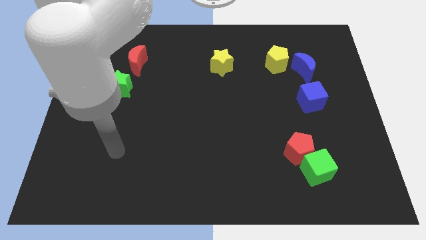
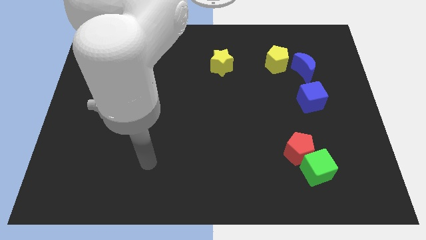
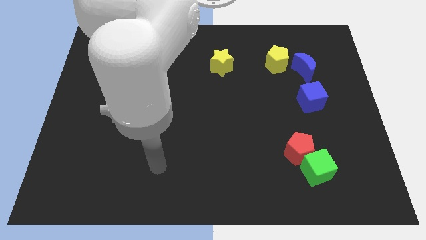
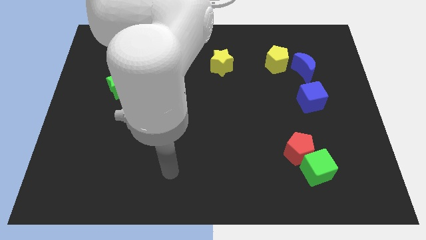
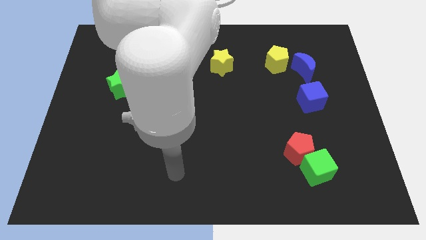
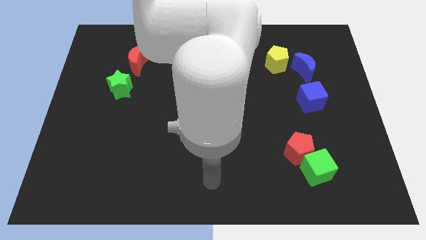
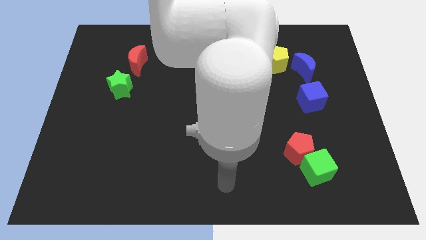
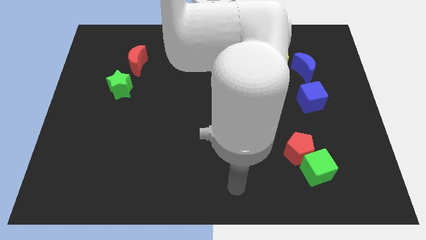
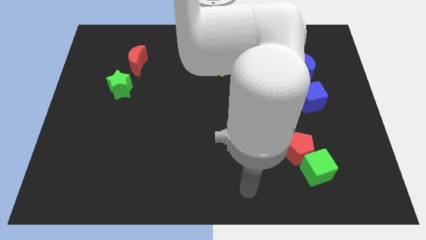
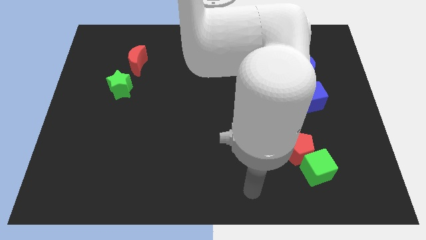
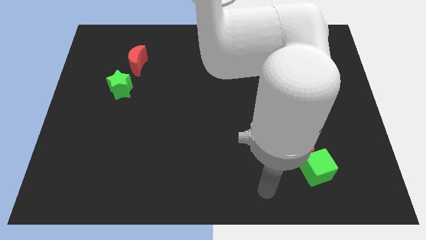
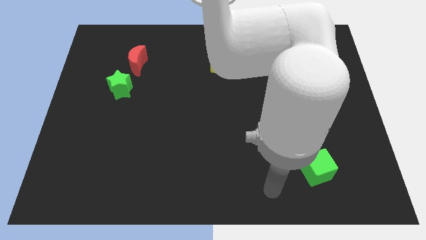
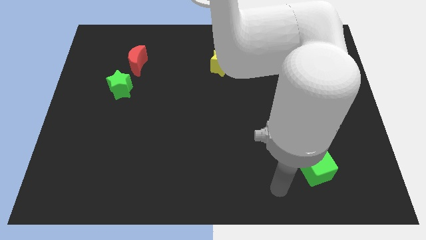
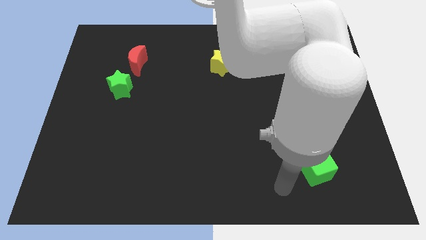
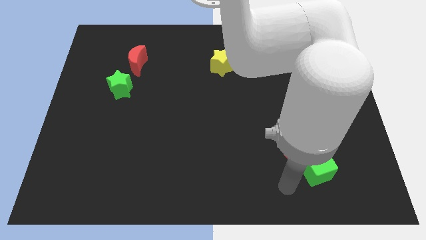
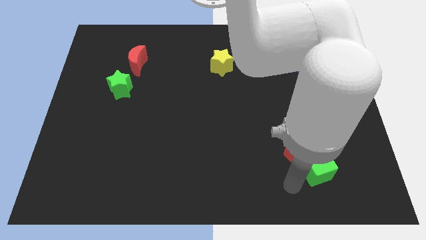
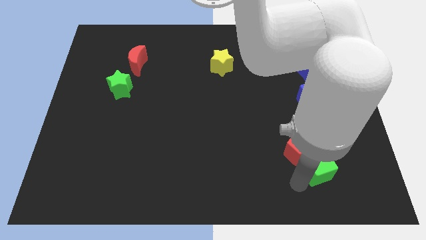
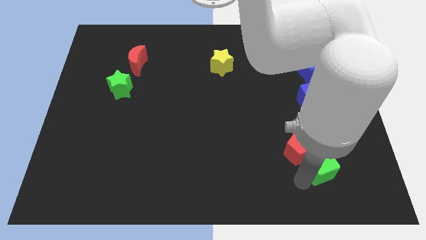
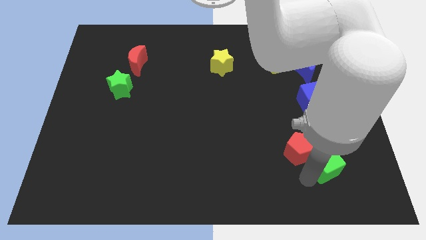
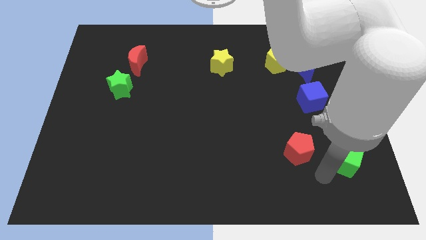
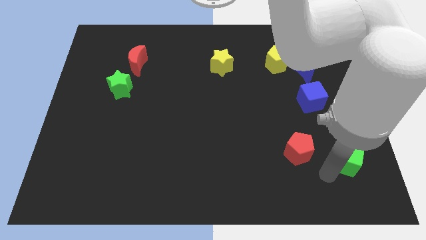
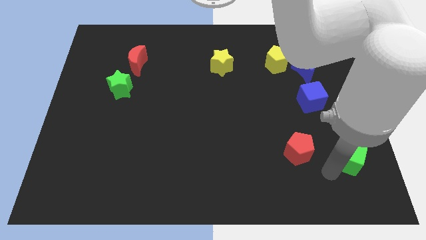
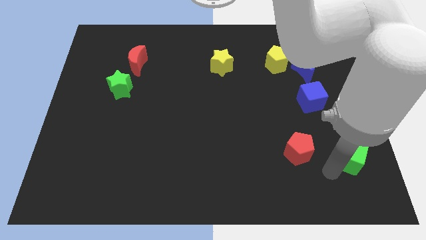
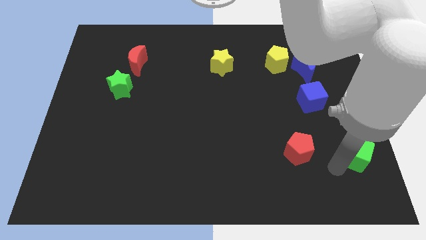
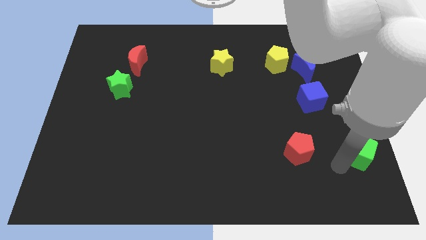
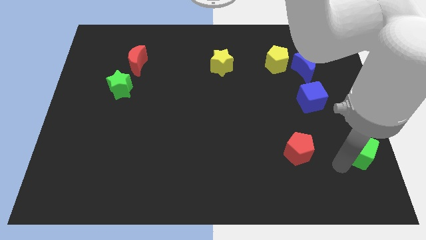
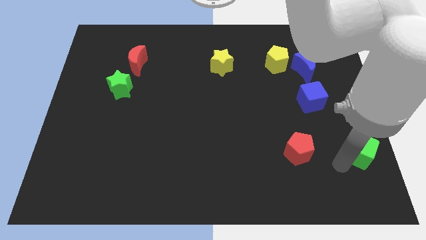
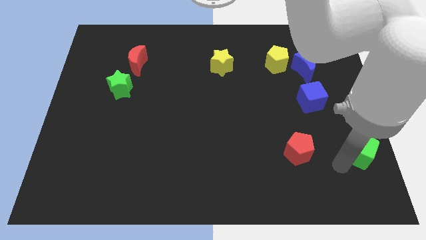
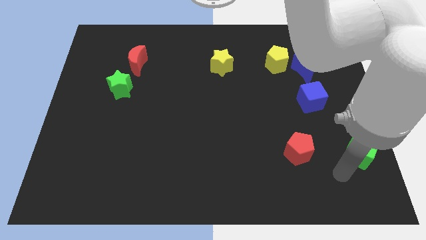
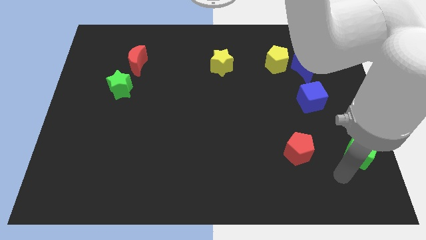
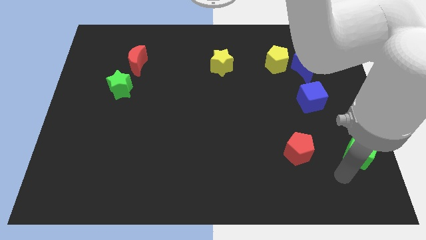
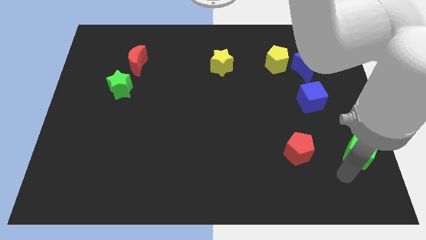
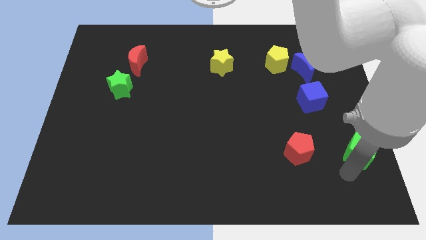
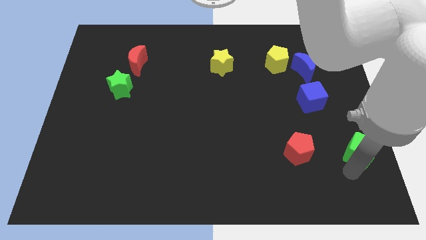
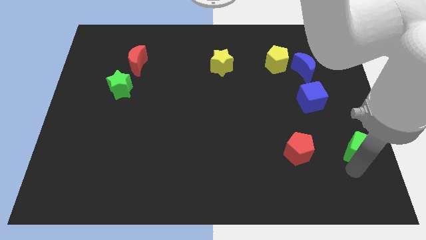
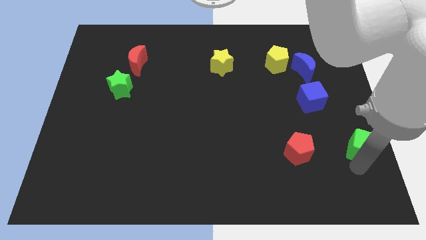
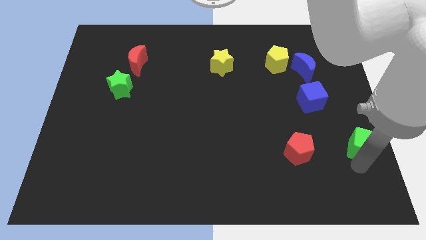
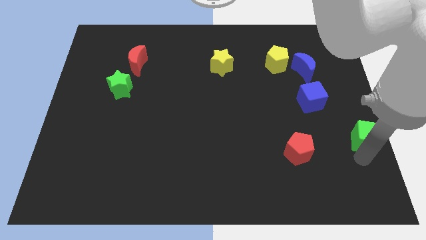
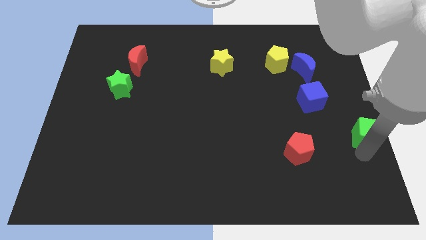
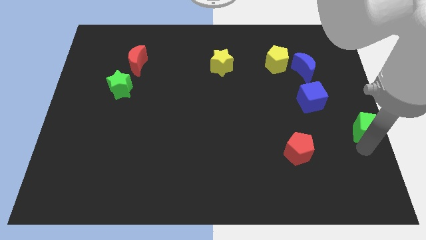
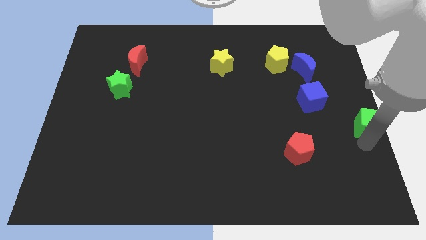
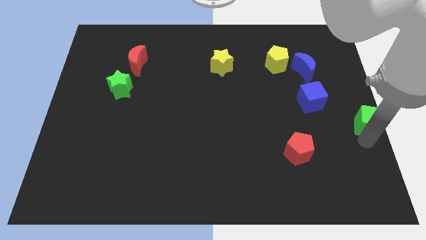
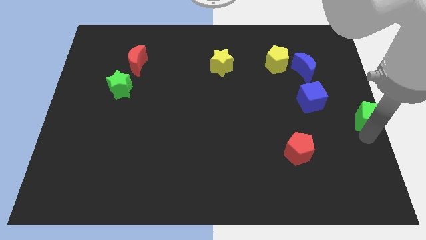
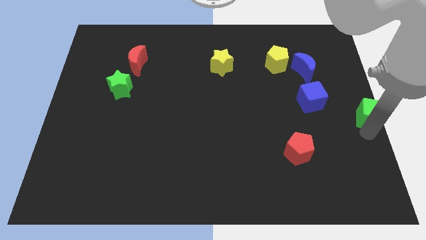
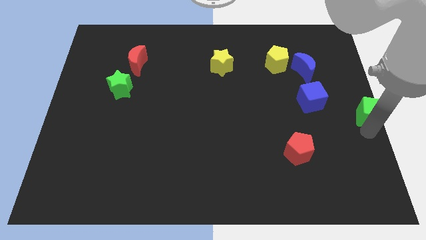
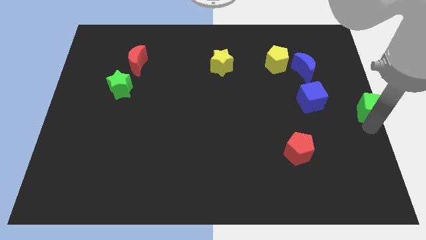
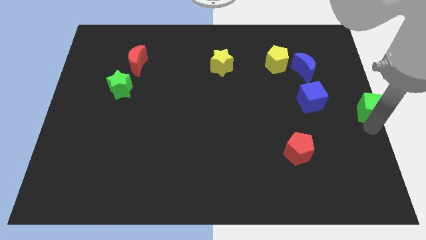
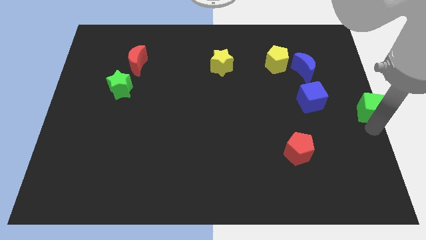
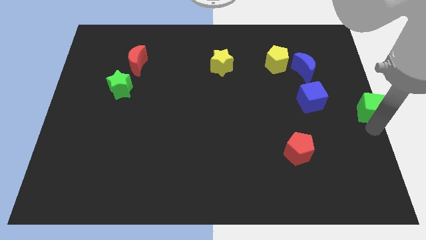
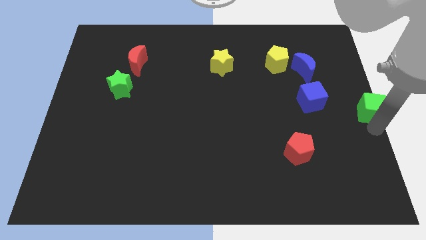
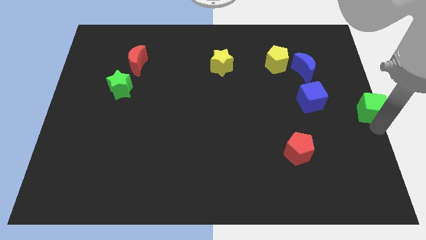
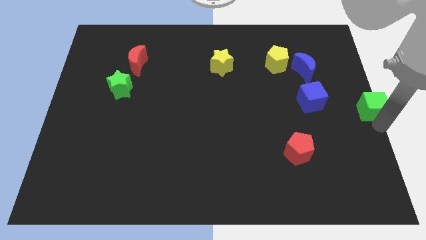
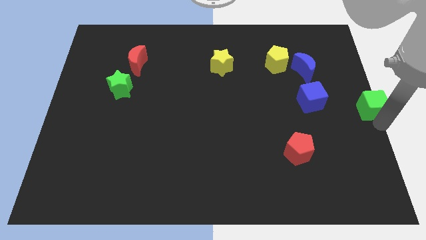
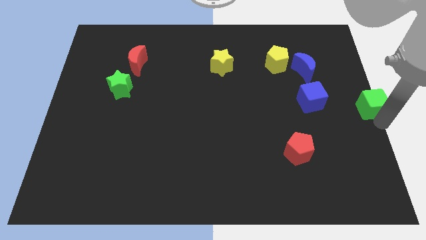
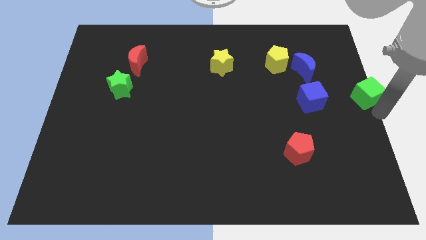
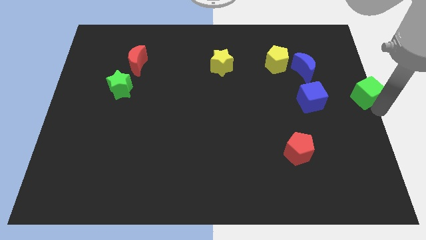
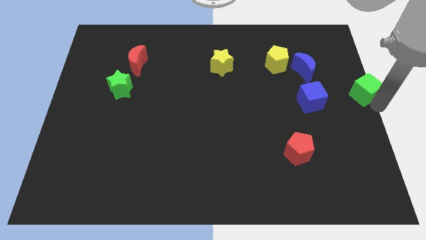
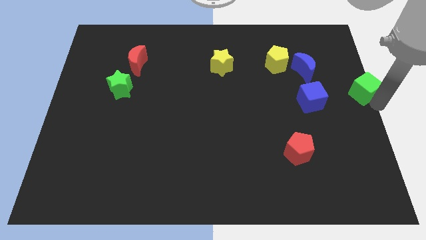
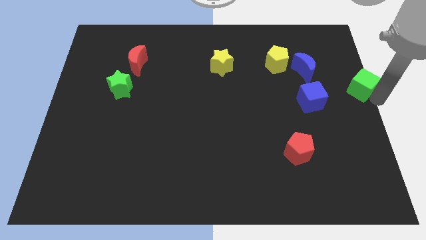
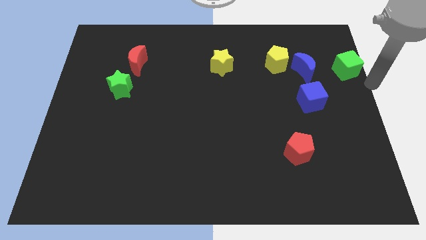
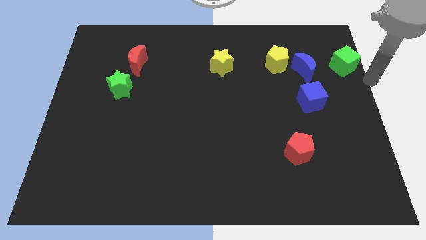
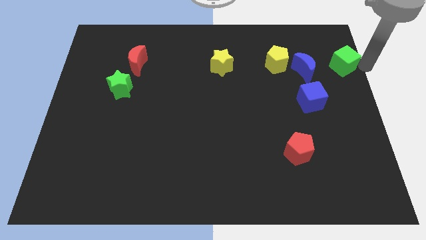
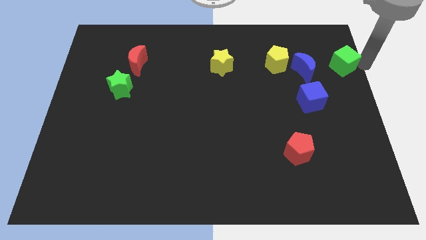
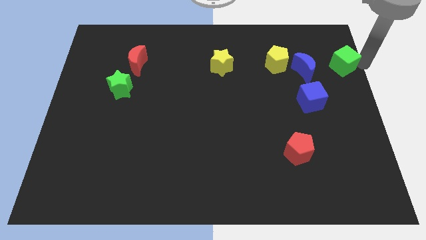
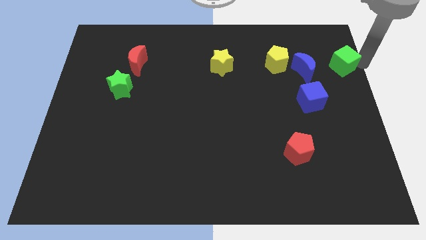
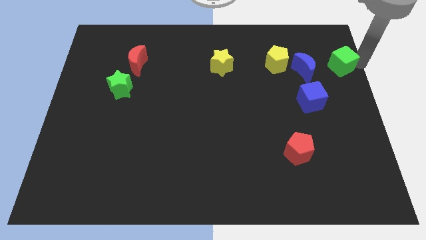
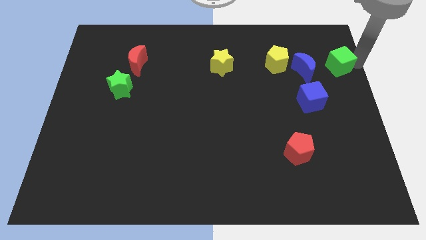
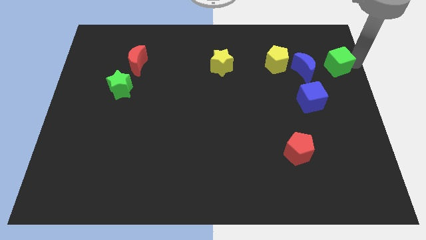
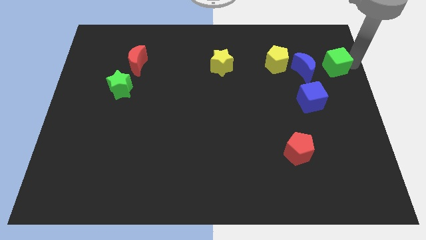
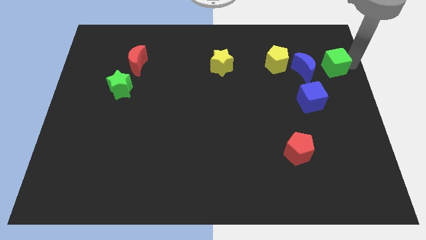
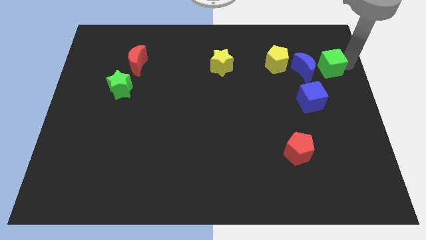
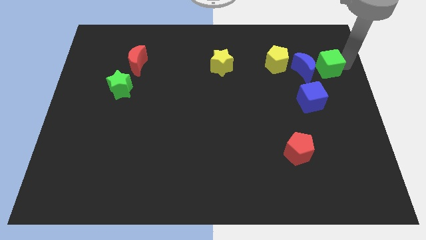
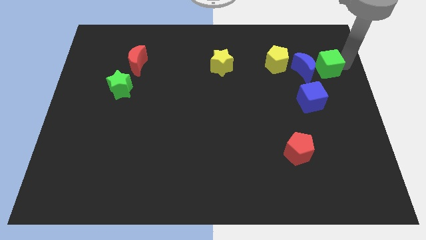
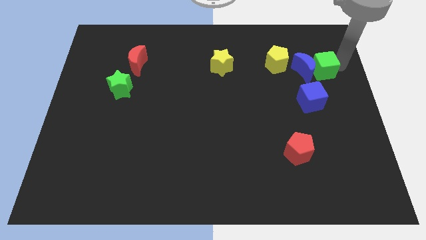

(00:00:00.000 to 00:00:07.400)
put the green cube to the blue moon

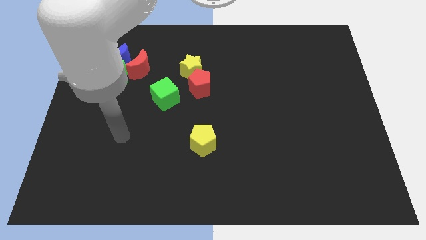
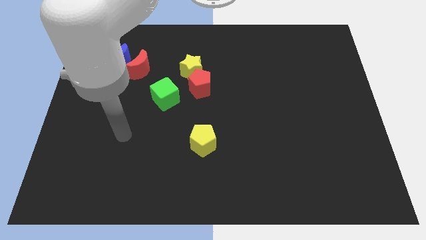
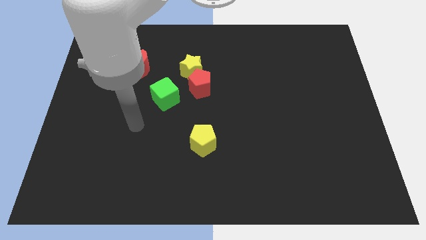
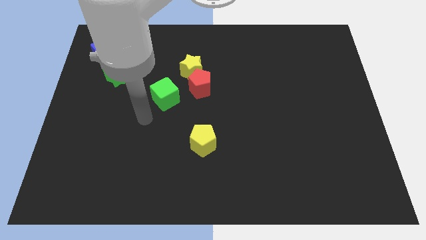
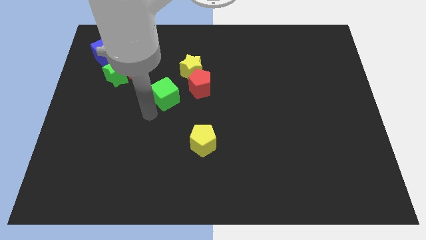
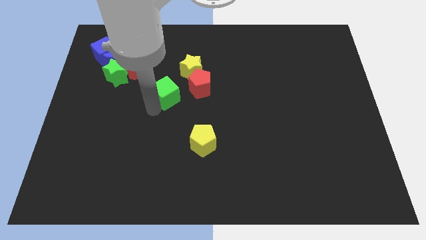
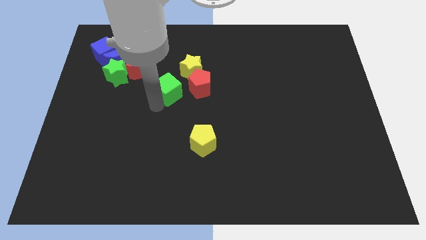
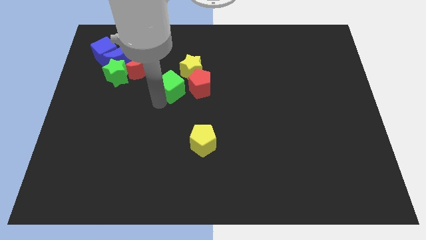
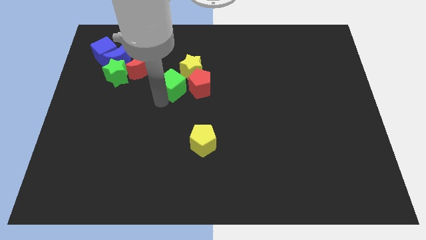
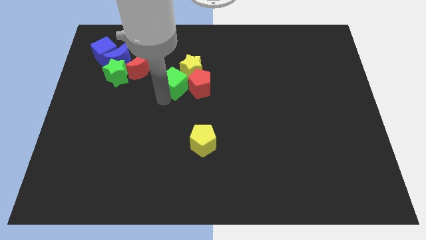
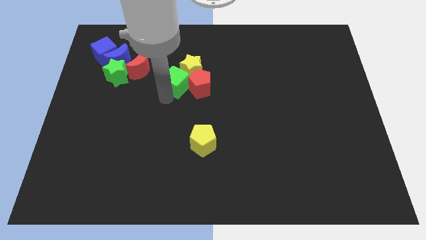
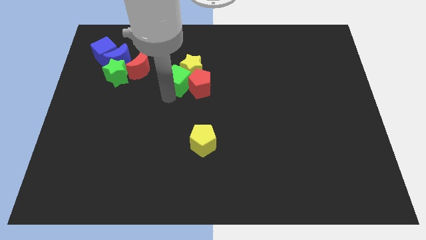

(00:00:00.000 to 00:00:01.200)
slide the green cube close to the yellow star
